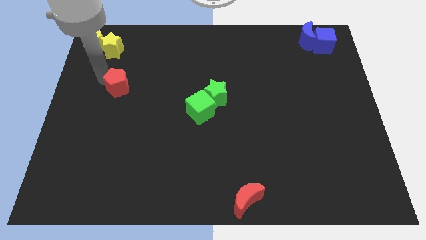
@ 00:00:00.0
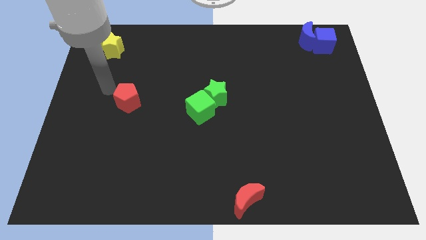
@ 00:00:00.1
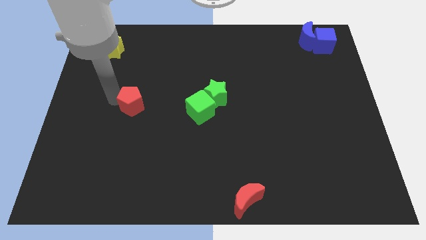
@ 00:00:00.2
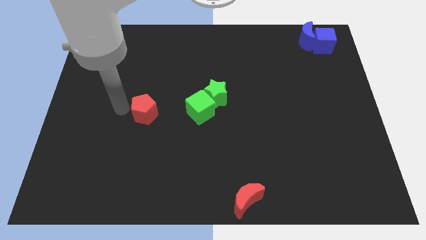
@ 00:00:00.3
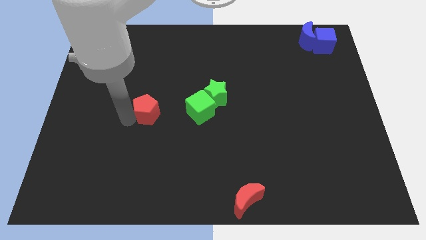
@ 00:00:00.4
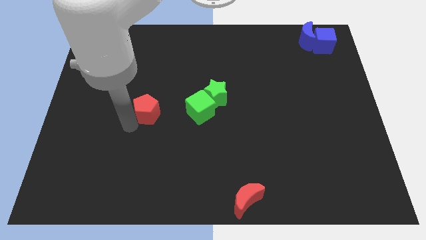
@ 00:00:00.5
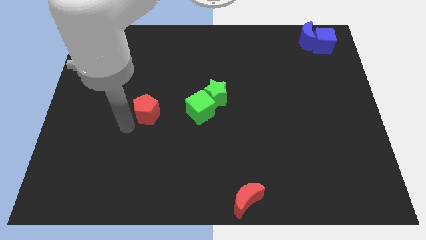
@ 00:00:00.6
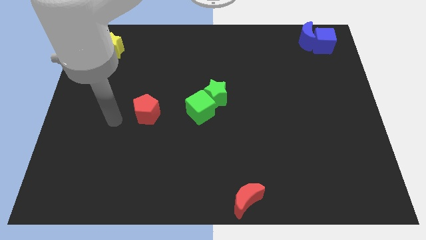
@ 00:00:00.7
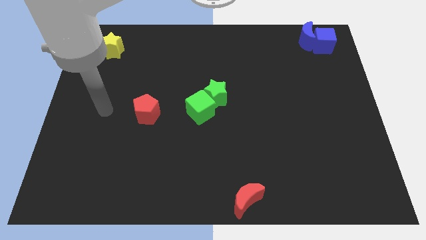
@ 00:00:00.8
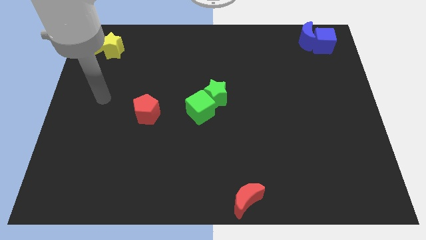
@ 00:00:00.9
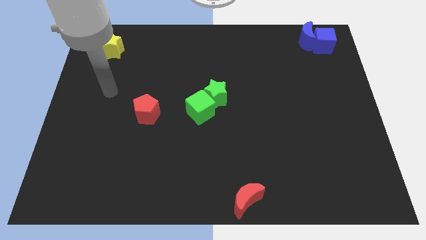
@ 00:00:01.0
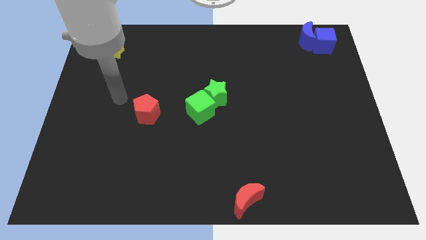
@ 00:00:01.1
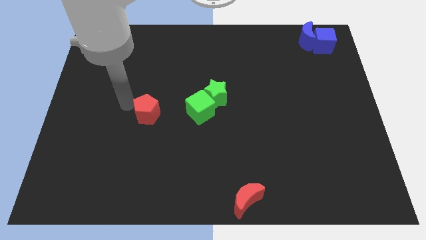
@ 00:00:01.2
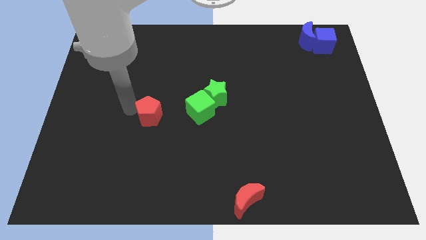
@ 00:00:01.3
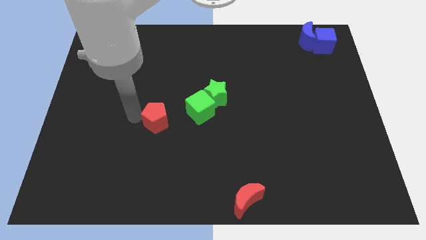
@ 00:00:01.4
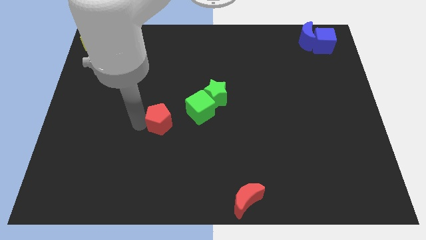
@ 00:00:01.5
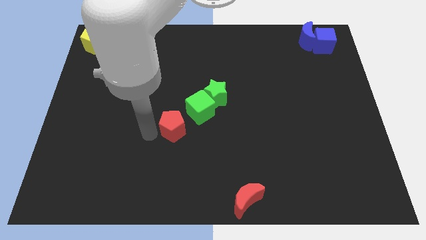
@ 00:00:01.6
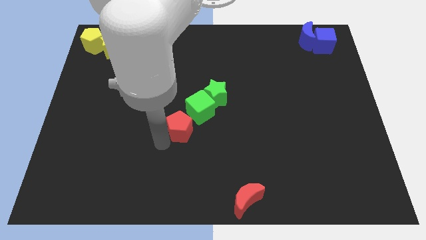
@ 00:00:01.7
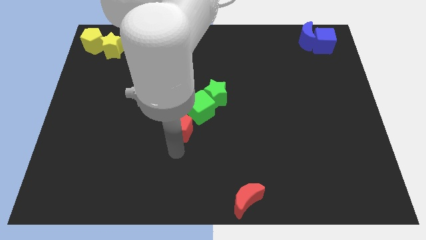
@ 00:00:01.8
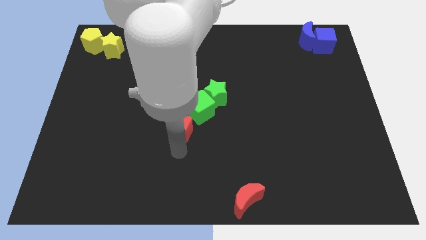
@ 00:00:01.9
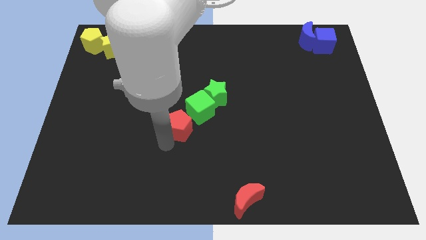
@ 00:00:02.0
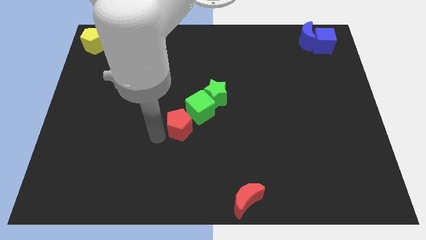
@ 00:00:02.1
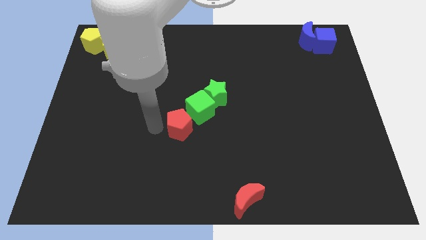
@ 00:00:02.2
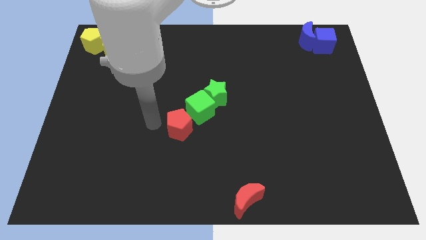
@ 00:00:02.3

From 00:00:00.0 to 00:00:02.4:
move red pentagon diagonally below the green cube

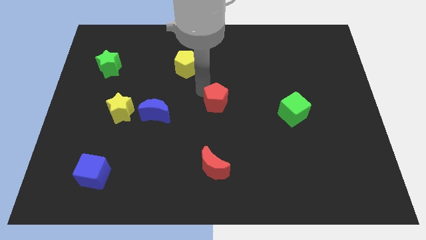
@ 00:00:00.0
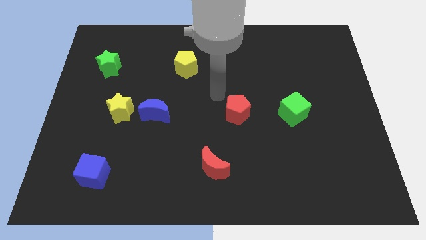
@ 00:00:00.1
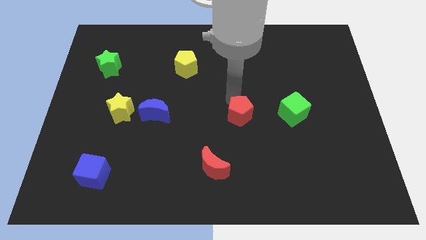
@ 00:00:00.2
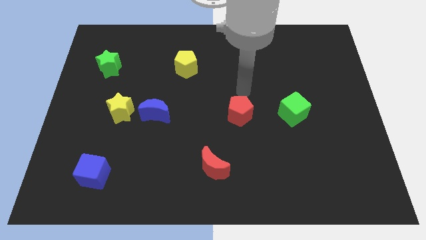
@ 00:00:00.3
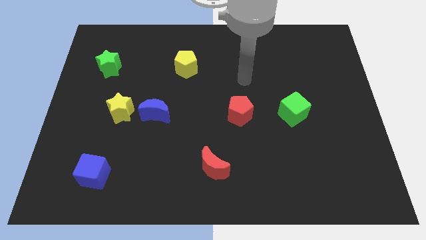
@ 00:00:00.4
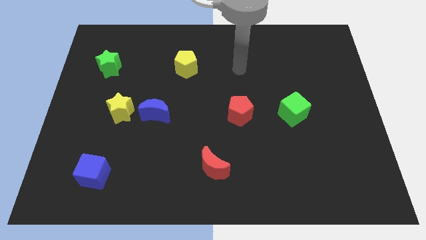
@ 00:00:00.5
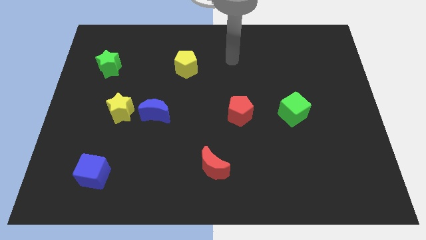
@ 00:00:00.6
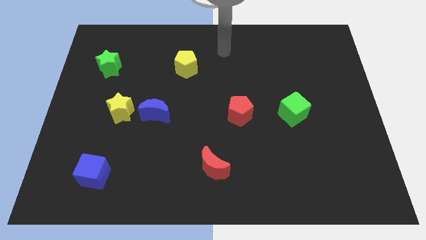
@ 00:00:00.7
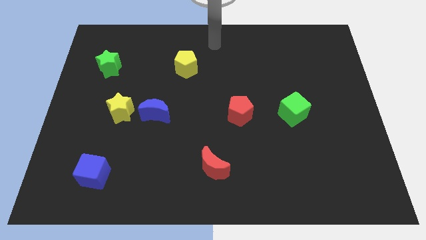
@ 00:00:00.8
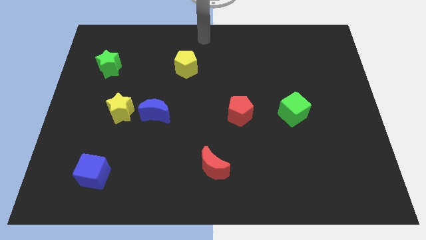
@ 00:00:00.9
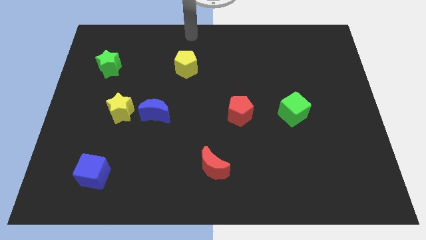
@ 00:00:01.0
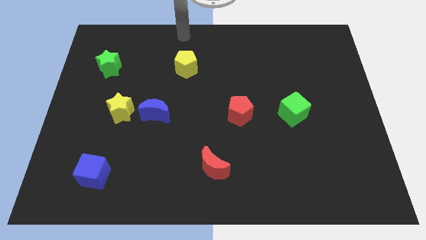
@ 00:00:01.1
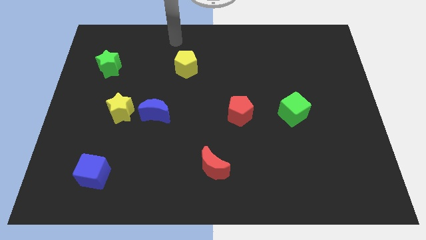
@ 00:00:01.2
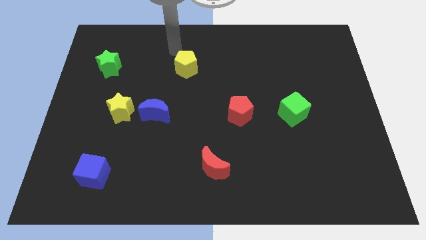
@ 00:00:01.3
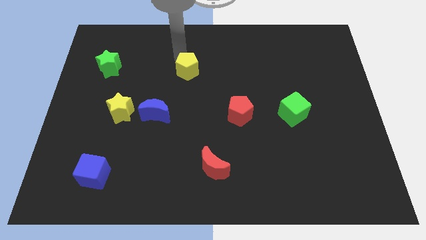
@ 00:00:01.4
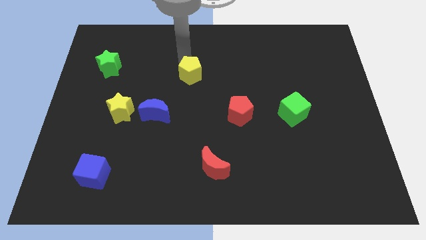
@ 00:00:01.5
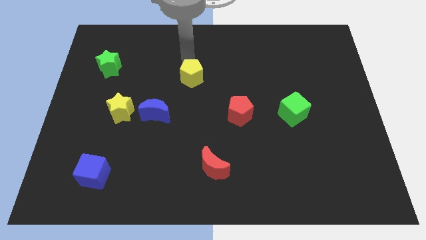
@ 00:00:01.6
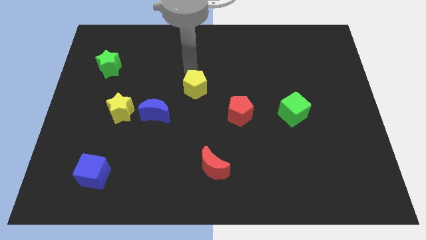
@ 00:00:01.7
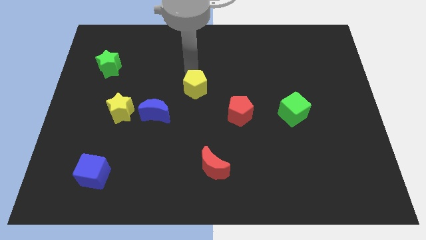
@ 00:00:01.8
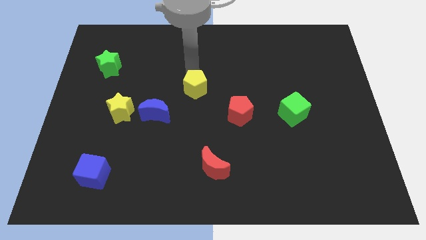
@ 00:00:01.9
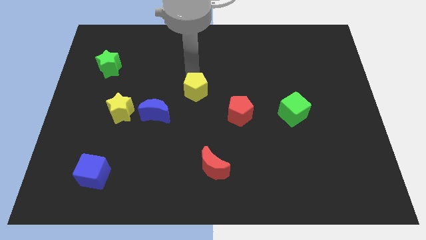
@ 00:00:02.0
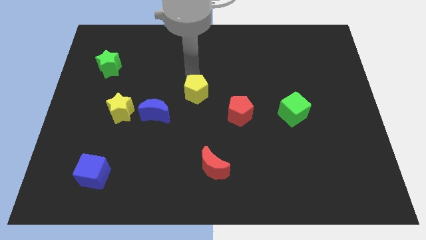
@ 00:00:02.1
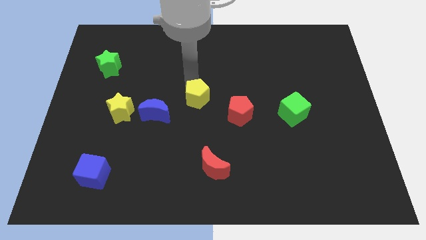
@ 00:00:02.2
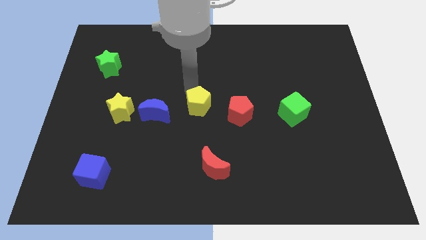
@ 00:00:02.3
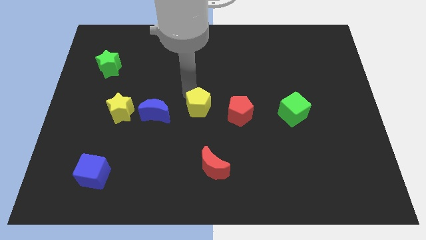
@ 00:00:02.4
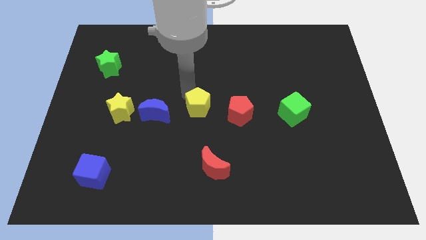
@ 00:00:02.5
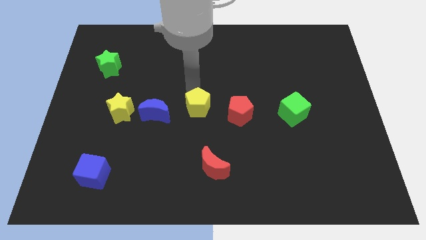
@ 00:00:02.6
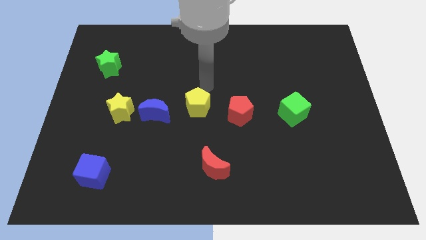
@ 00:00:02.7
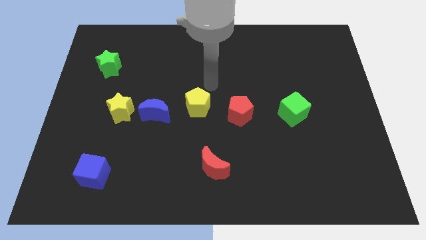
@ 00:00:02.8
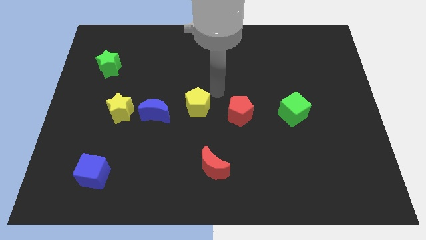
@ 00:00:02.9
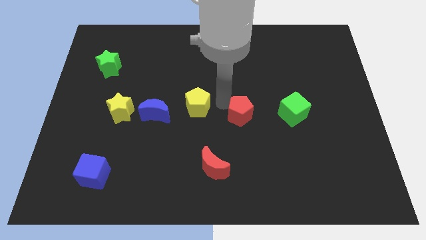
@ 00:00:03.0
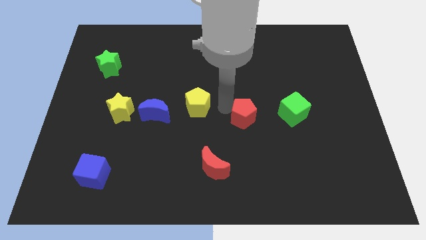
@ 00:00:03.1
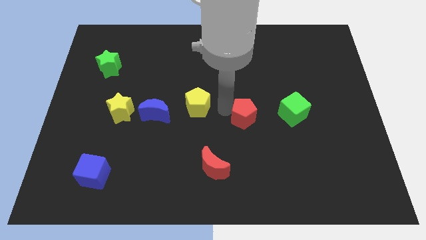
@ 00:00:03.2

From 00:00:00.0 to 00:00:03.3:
place the yellow pentagon to the left of the red pentagon

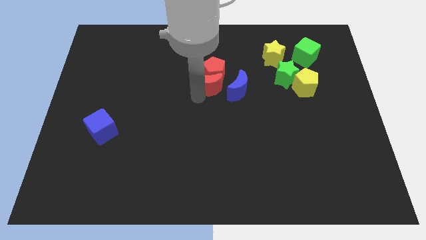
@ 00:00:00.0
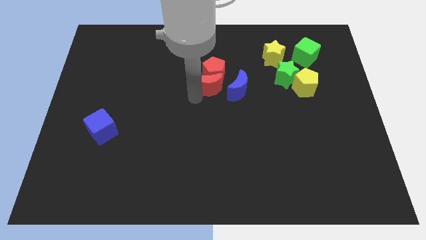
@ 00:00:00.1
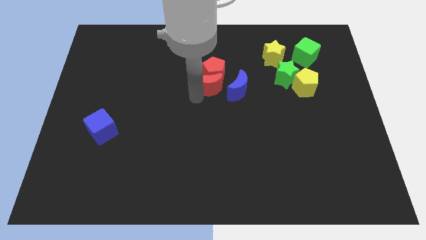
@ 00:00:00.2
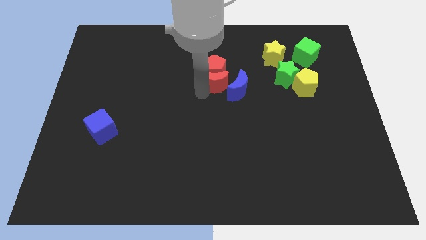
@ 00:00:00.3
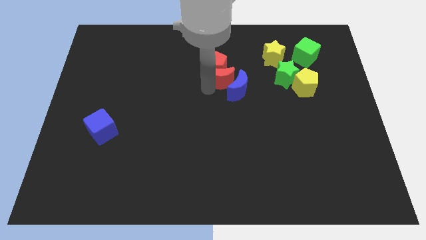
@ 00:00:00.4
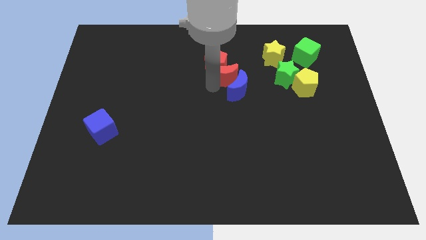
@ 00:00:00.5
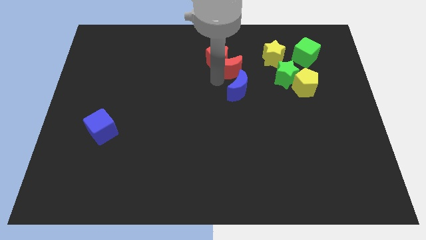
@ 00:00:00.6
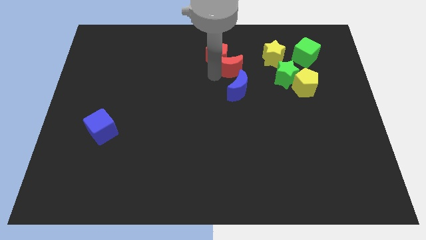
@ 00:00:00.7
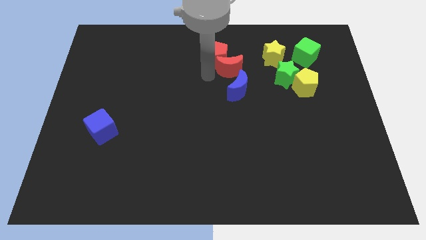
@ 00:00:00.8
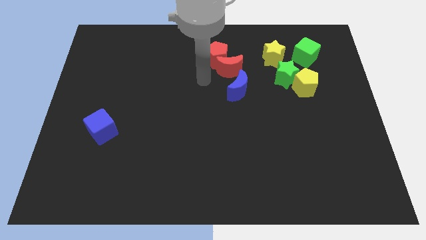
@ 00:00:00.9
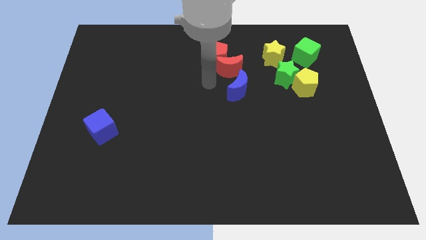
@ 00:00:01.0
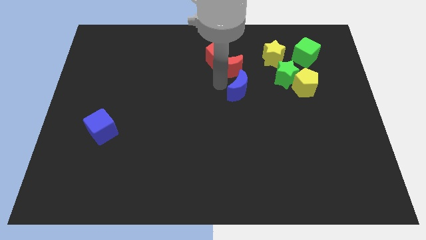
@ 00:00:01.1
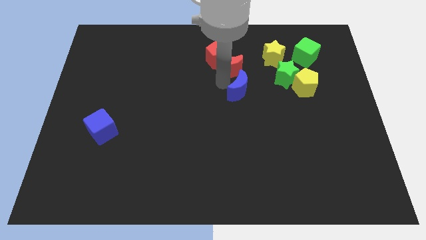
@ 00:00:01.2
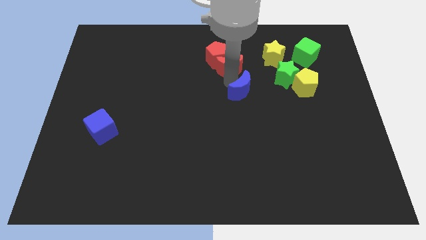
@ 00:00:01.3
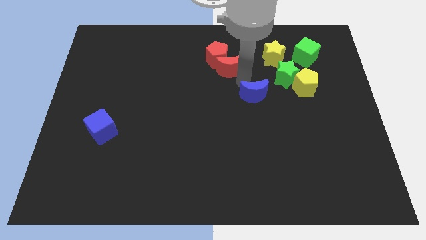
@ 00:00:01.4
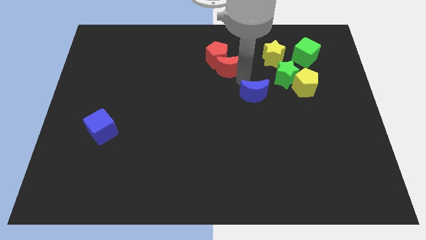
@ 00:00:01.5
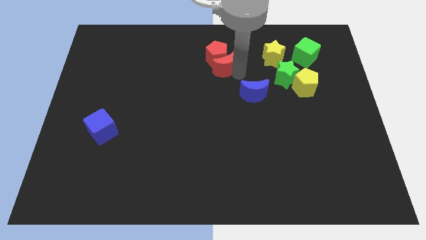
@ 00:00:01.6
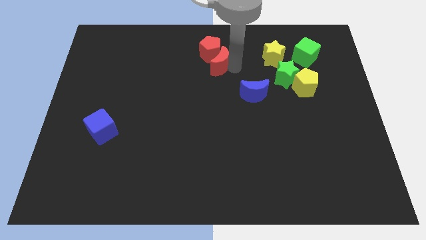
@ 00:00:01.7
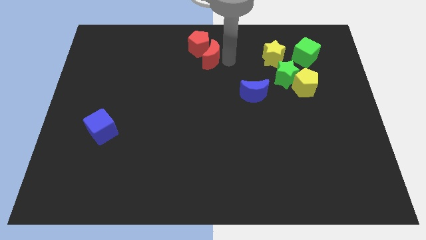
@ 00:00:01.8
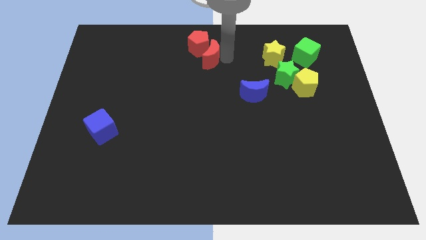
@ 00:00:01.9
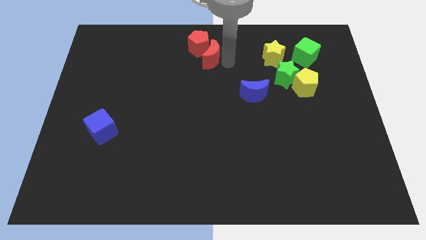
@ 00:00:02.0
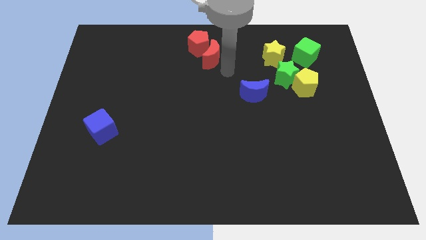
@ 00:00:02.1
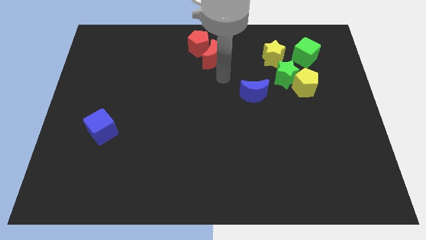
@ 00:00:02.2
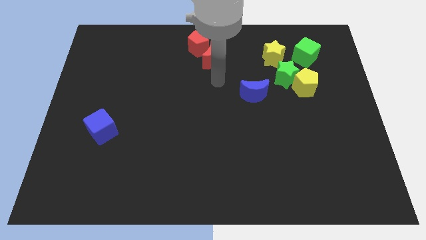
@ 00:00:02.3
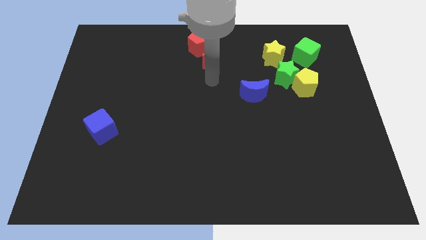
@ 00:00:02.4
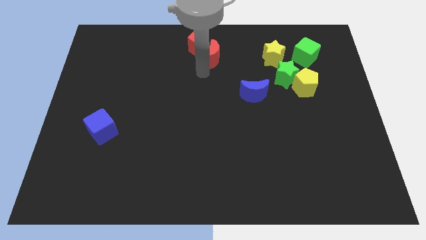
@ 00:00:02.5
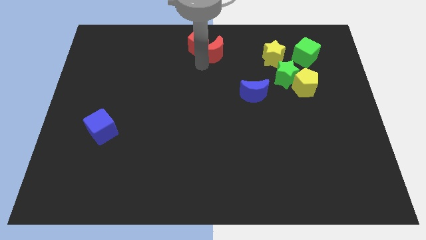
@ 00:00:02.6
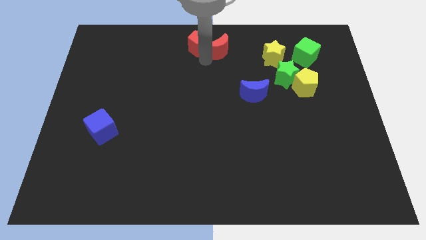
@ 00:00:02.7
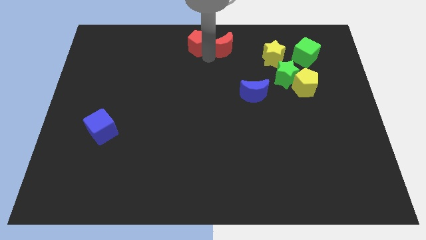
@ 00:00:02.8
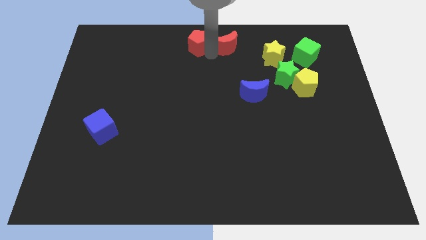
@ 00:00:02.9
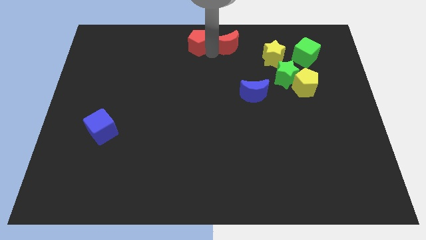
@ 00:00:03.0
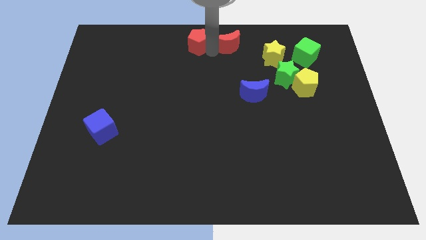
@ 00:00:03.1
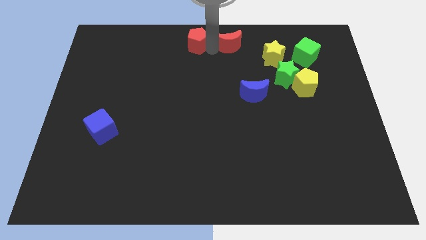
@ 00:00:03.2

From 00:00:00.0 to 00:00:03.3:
move the red objects to the top center of the board
